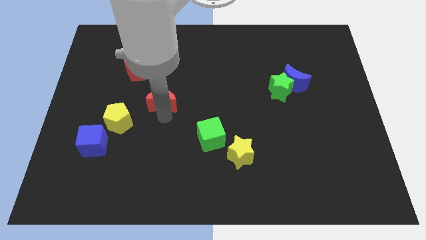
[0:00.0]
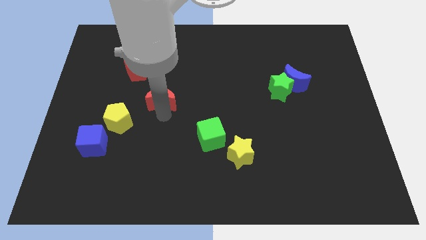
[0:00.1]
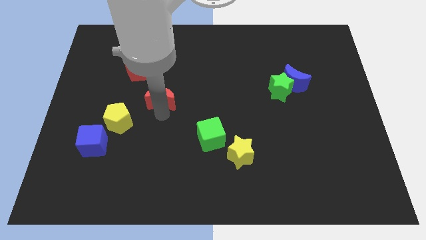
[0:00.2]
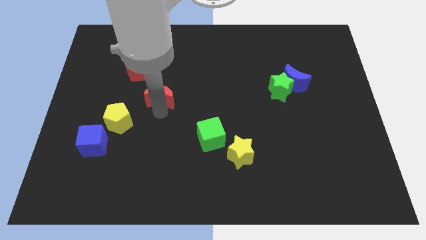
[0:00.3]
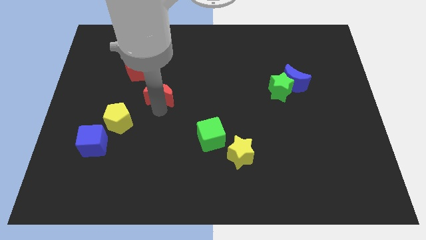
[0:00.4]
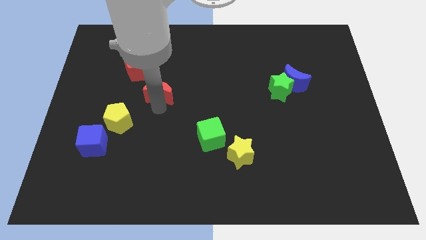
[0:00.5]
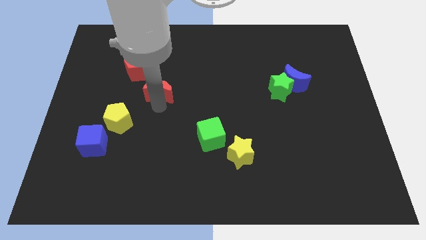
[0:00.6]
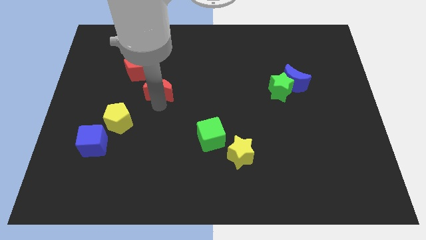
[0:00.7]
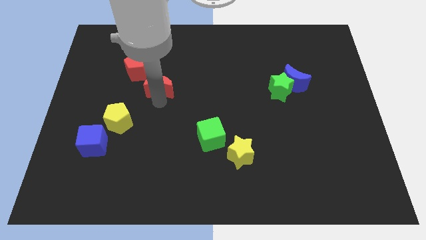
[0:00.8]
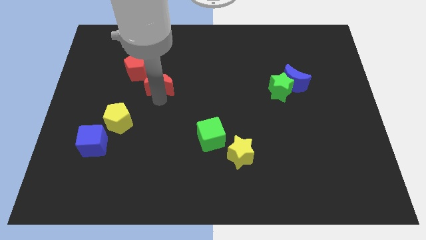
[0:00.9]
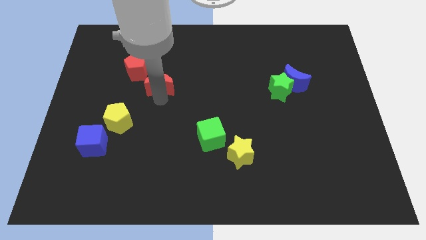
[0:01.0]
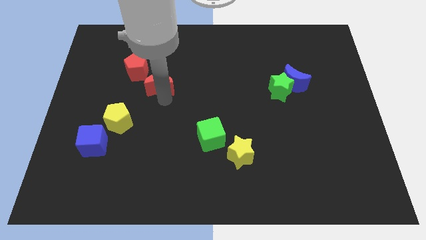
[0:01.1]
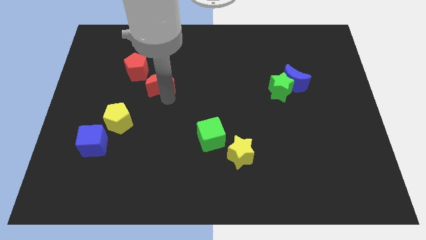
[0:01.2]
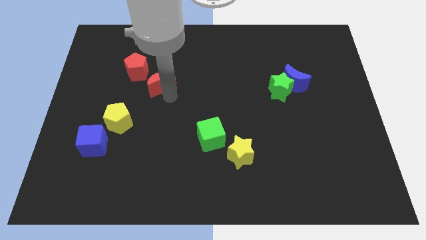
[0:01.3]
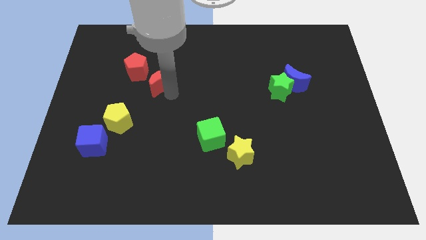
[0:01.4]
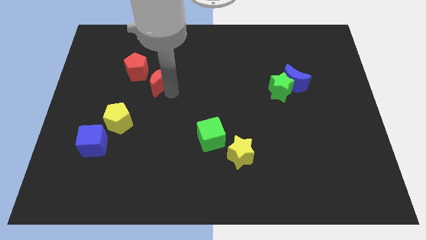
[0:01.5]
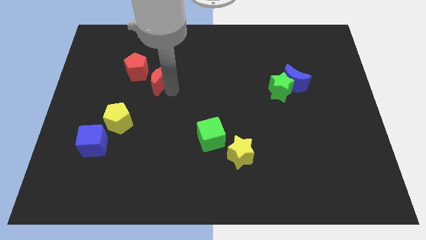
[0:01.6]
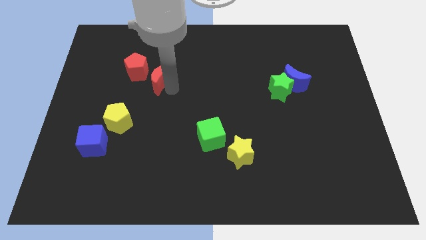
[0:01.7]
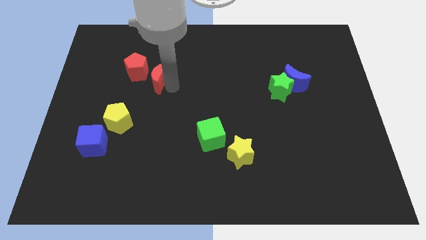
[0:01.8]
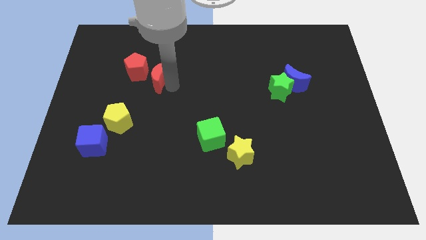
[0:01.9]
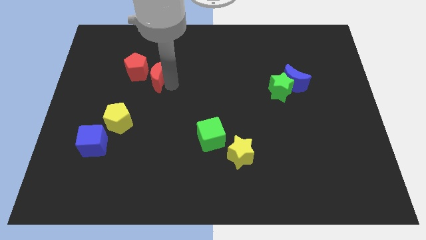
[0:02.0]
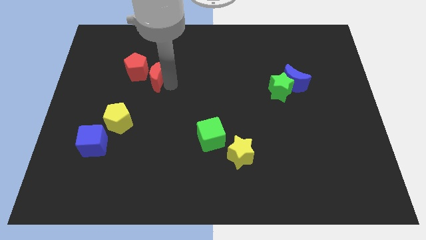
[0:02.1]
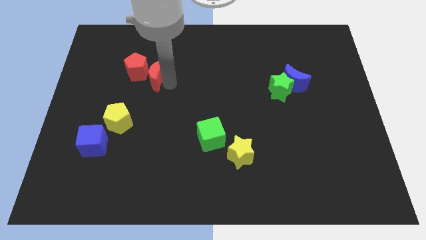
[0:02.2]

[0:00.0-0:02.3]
move the red crescent to the right of the red pentagon

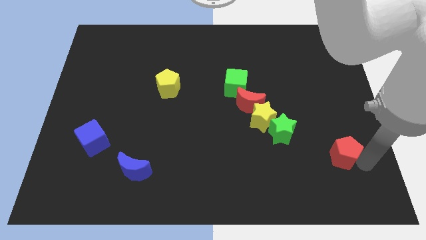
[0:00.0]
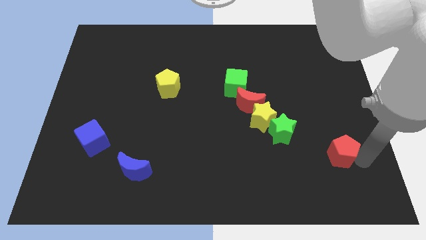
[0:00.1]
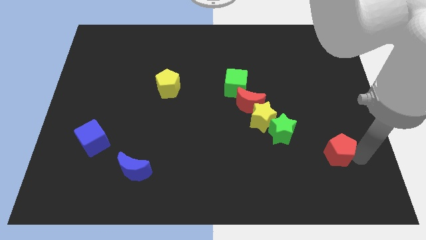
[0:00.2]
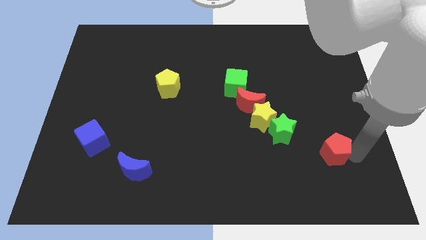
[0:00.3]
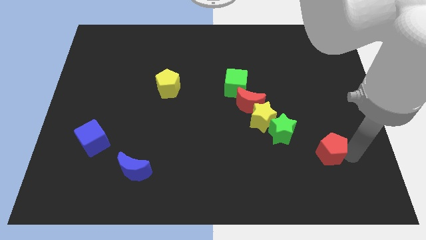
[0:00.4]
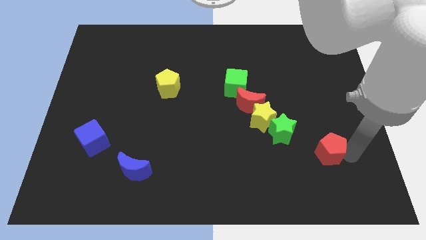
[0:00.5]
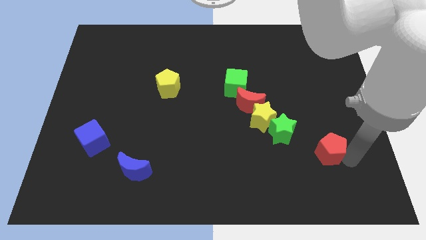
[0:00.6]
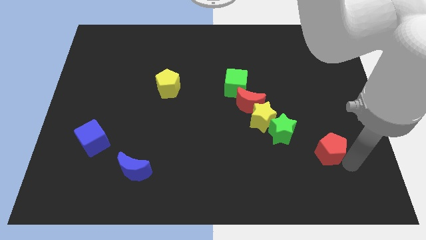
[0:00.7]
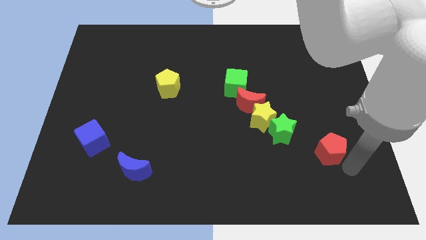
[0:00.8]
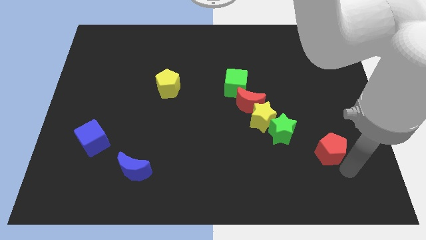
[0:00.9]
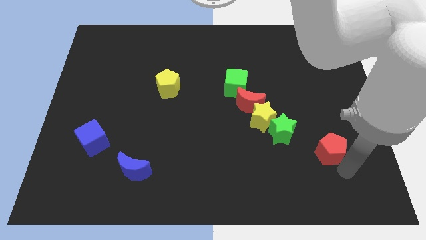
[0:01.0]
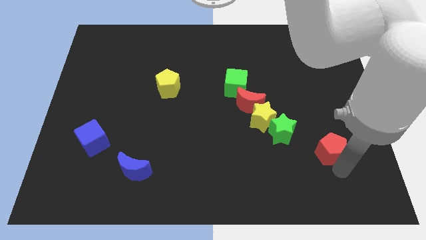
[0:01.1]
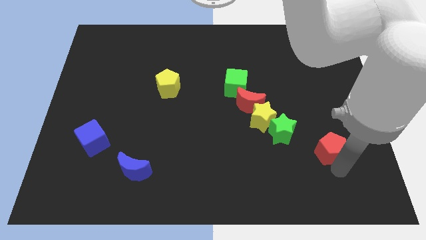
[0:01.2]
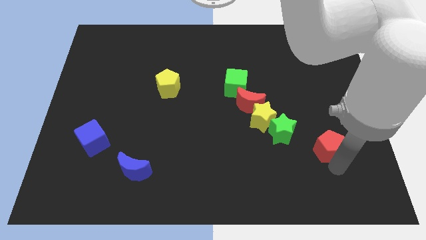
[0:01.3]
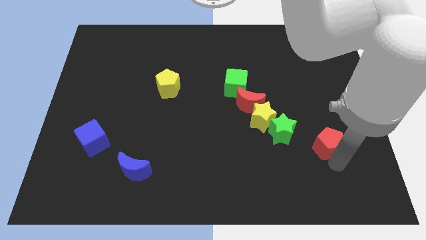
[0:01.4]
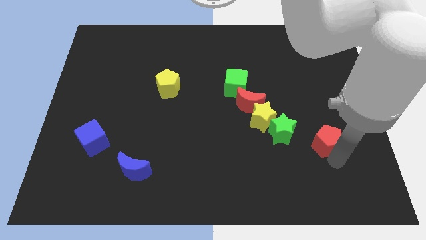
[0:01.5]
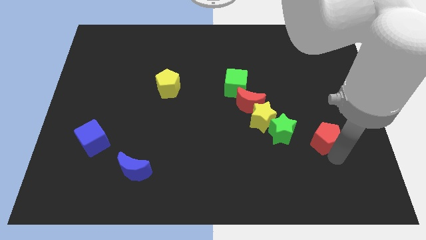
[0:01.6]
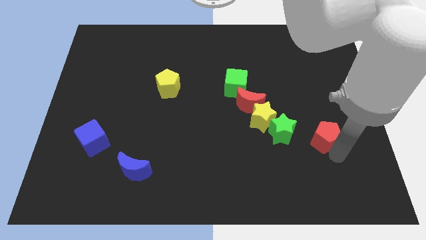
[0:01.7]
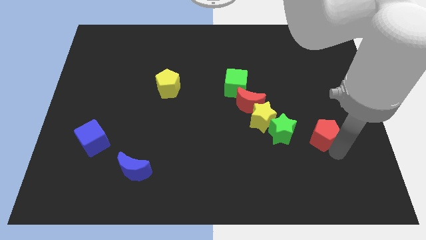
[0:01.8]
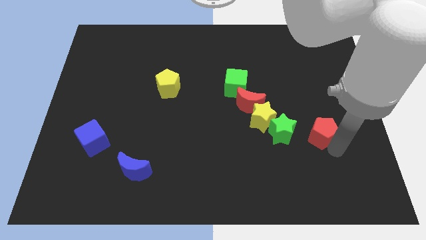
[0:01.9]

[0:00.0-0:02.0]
place the red pentagon to the right of the green star

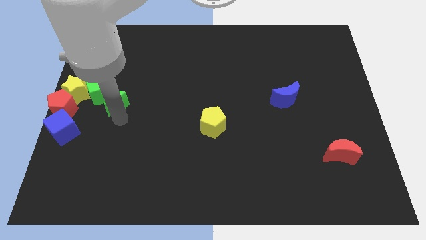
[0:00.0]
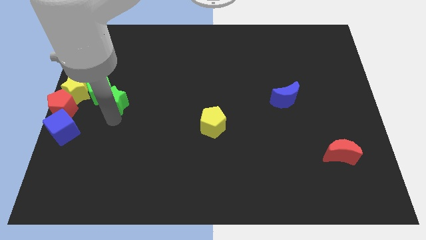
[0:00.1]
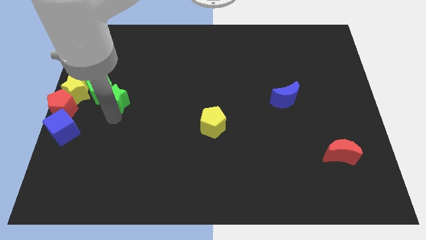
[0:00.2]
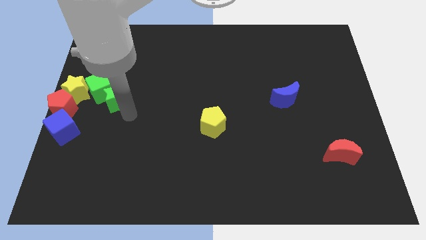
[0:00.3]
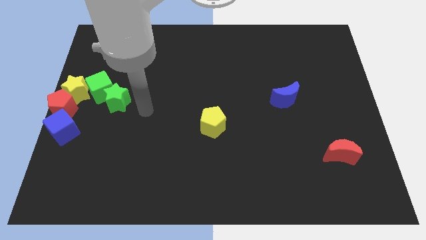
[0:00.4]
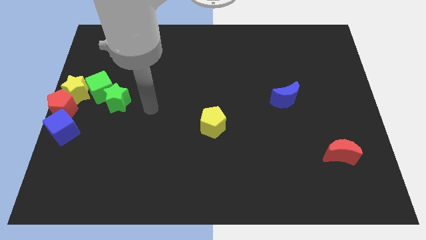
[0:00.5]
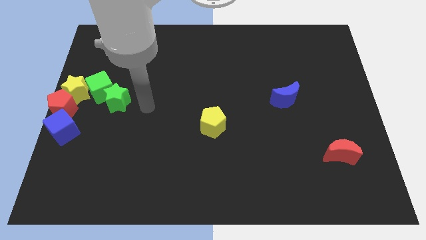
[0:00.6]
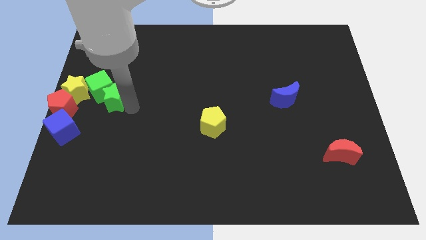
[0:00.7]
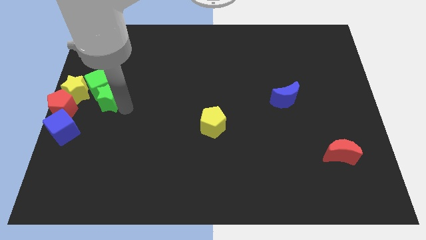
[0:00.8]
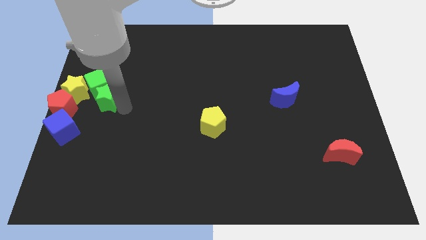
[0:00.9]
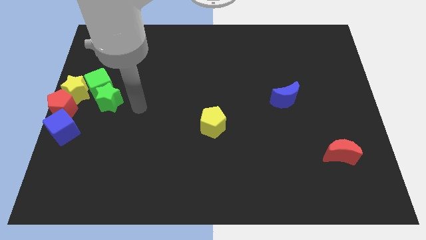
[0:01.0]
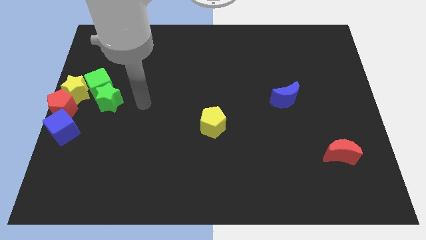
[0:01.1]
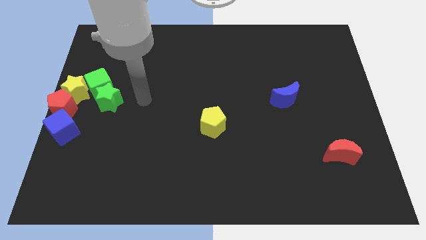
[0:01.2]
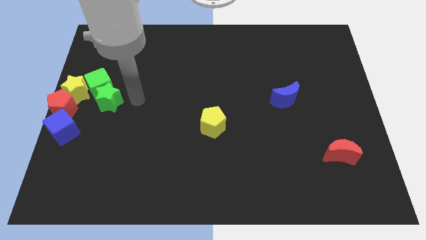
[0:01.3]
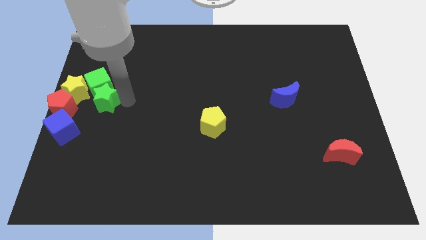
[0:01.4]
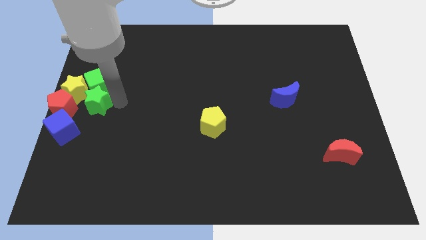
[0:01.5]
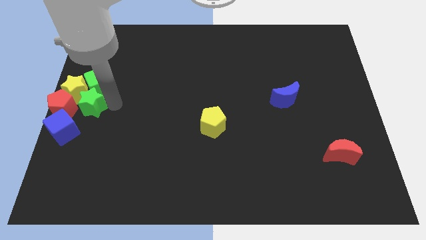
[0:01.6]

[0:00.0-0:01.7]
place the green star right to the red pentagon
